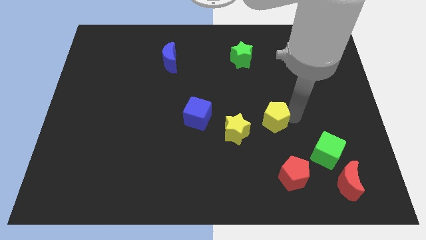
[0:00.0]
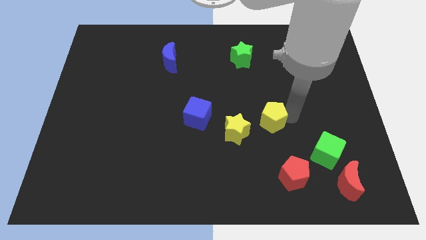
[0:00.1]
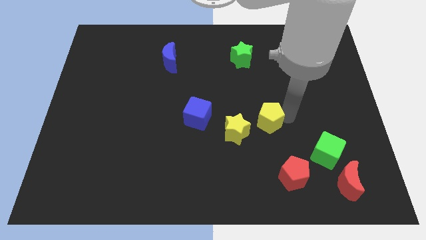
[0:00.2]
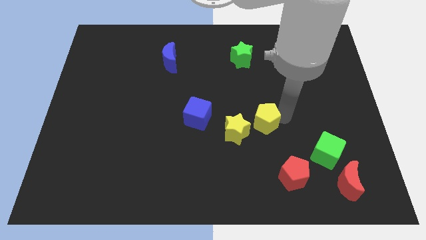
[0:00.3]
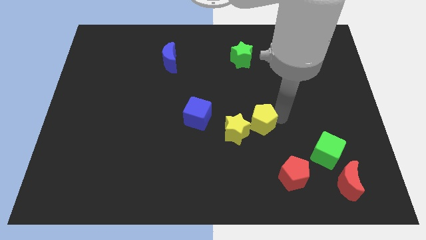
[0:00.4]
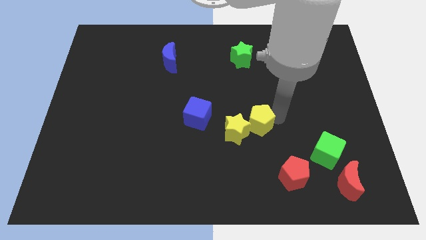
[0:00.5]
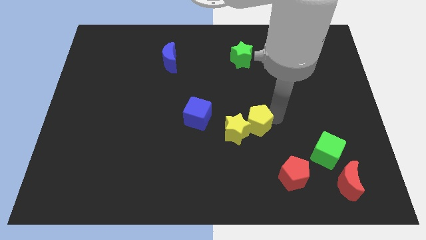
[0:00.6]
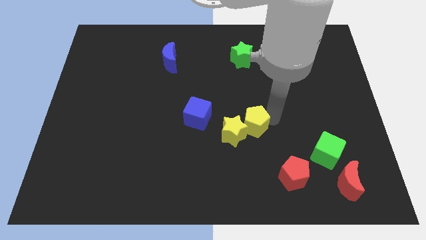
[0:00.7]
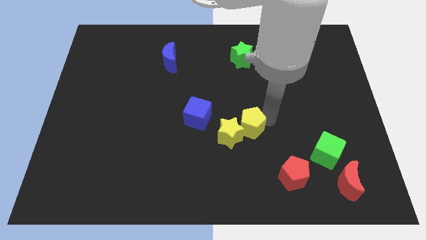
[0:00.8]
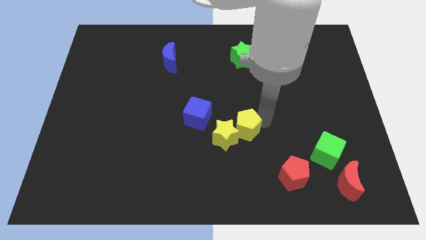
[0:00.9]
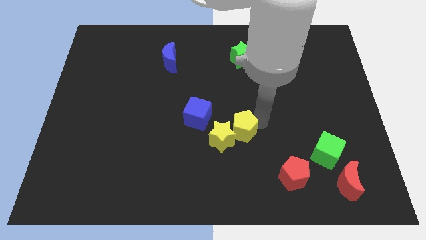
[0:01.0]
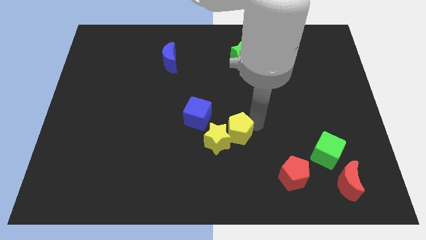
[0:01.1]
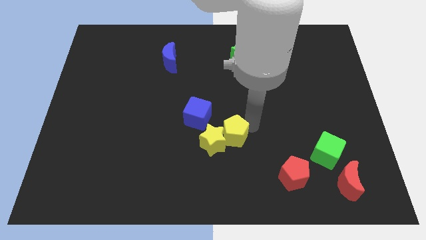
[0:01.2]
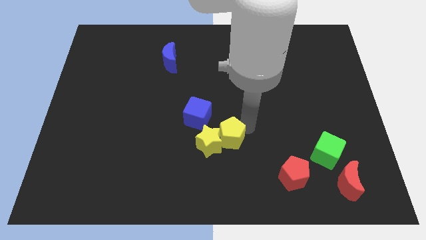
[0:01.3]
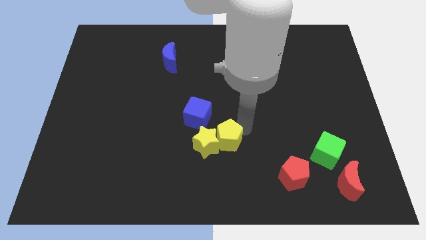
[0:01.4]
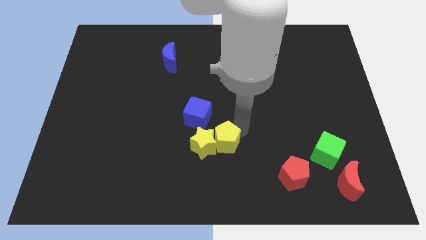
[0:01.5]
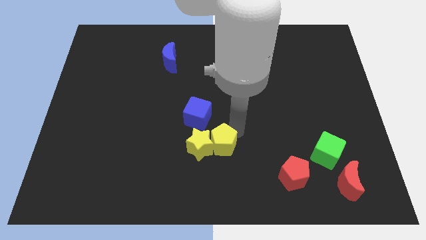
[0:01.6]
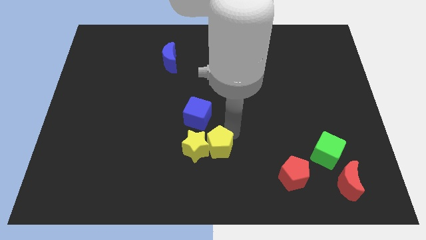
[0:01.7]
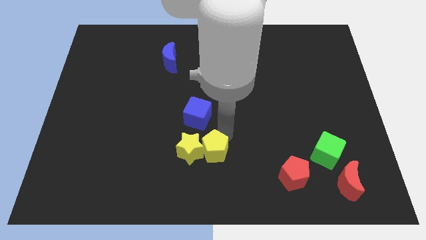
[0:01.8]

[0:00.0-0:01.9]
move the yellow pentagon and yellow star towards left

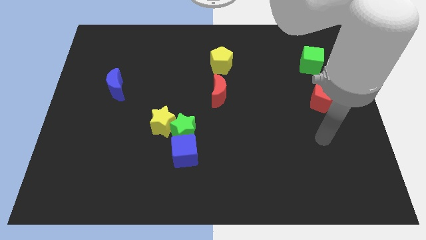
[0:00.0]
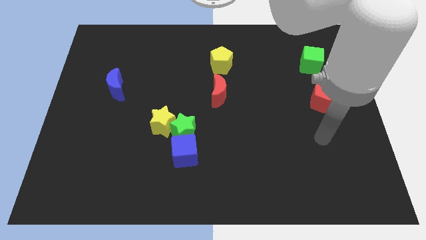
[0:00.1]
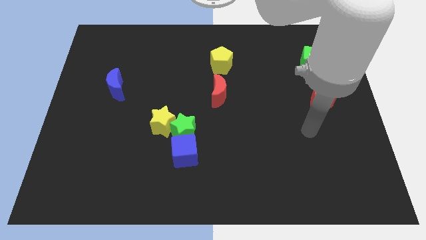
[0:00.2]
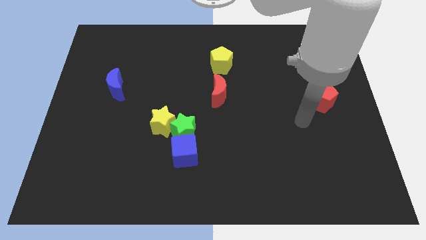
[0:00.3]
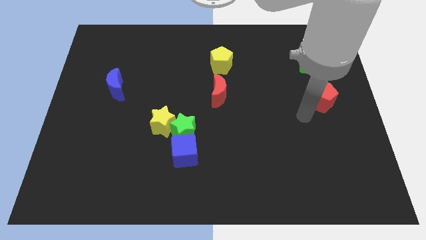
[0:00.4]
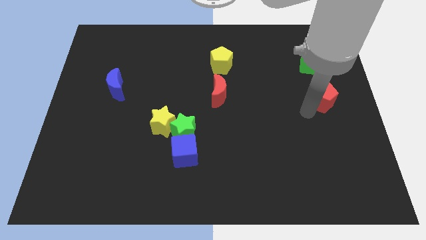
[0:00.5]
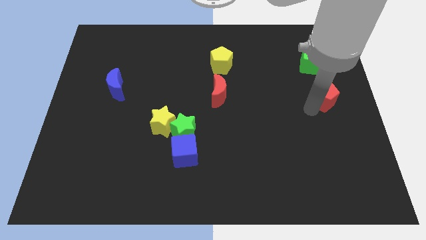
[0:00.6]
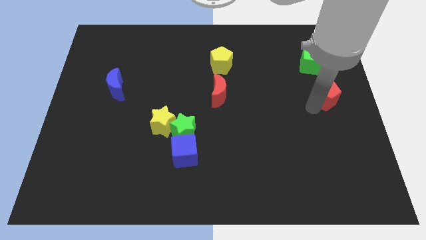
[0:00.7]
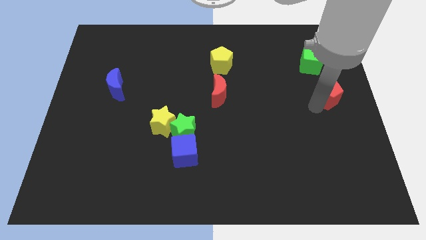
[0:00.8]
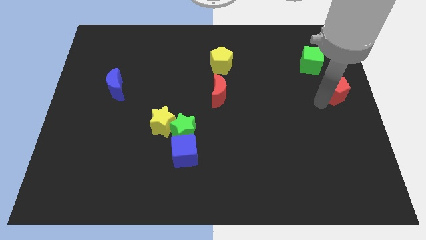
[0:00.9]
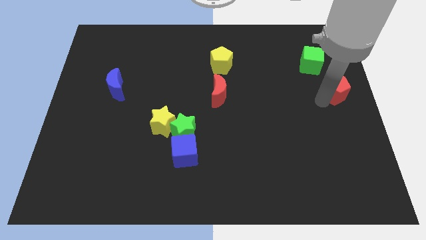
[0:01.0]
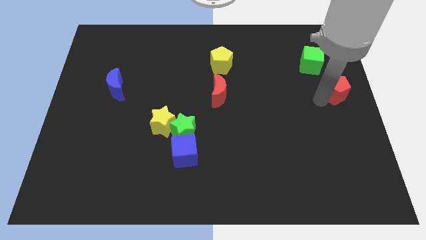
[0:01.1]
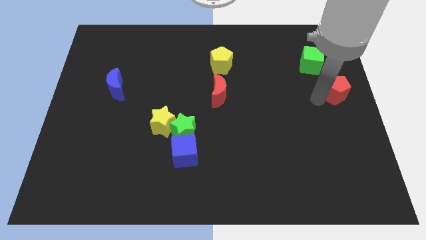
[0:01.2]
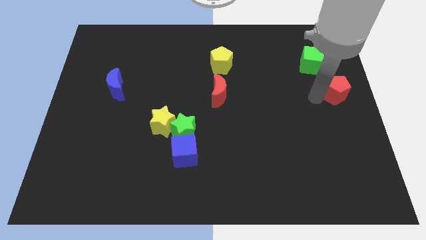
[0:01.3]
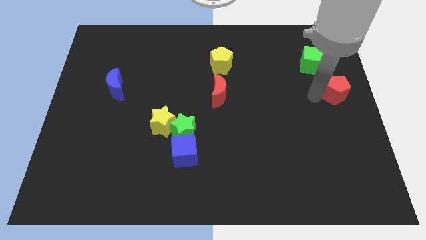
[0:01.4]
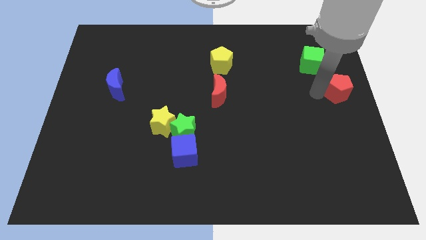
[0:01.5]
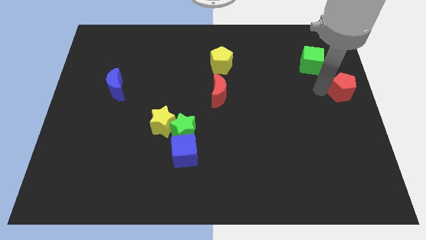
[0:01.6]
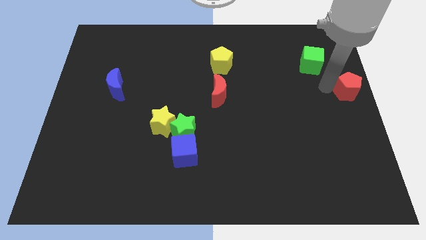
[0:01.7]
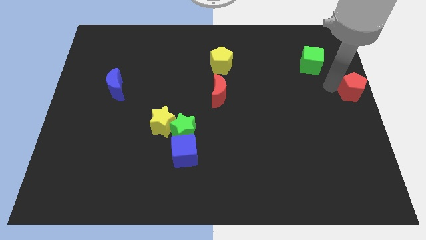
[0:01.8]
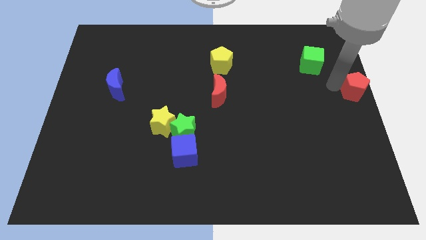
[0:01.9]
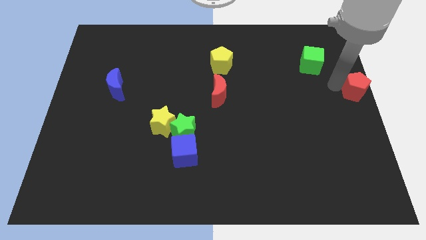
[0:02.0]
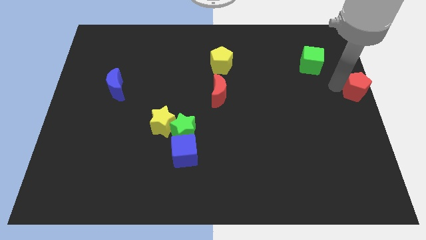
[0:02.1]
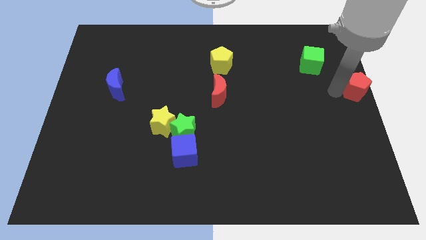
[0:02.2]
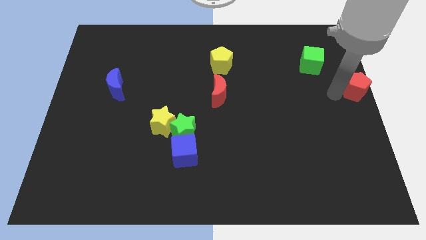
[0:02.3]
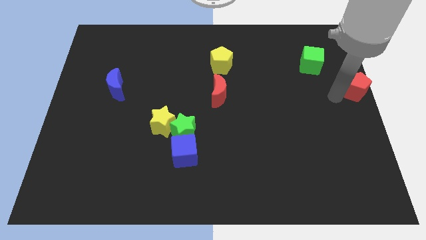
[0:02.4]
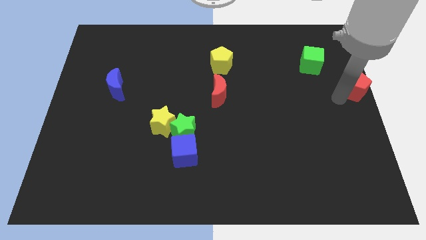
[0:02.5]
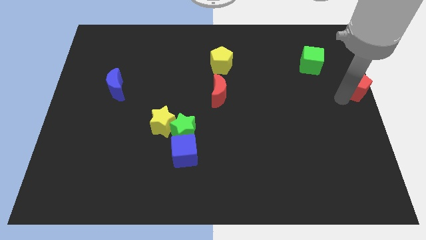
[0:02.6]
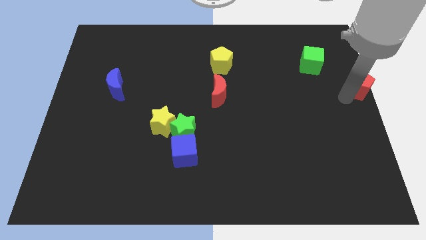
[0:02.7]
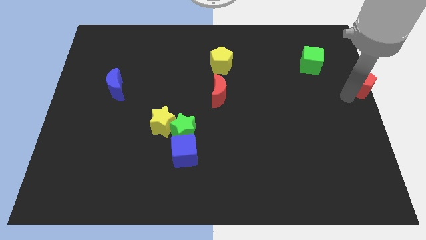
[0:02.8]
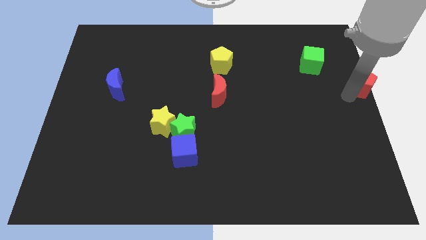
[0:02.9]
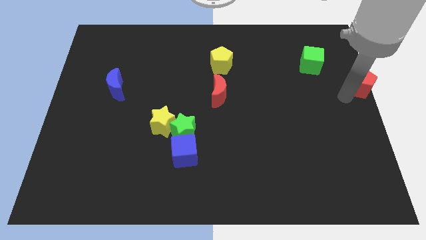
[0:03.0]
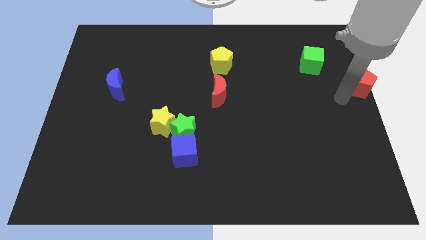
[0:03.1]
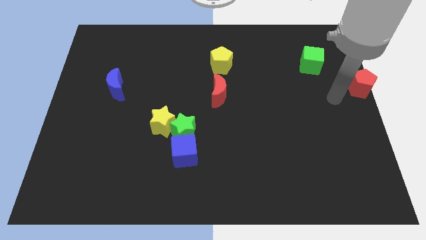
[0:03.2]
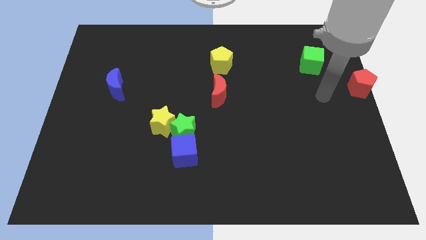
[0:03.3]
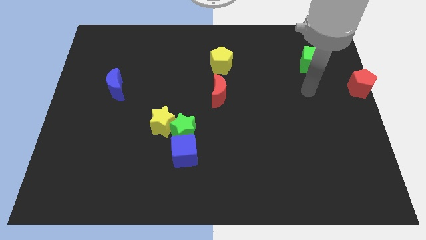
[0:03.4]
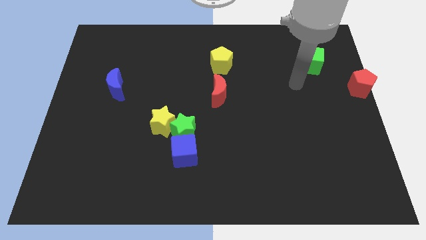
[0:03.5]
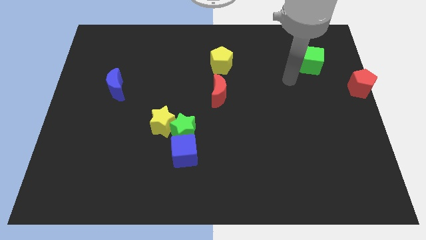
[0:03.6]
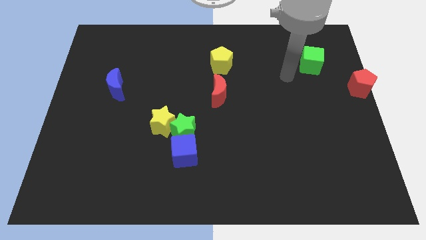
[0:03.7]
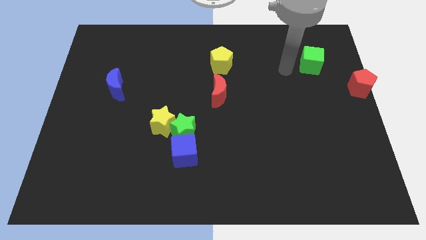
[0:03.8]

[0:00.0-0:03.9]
move the red pentagon to the left side of the board

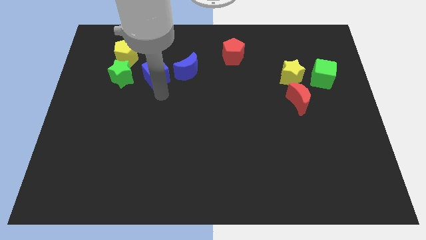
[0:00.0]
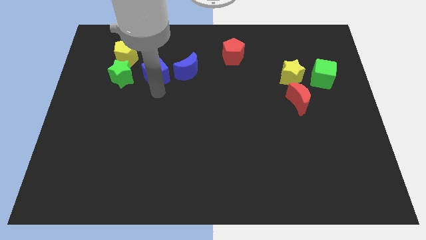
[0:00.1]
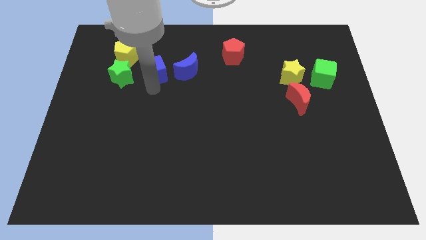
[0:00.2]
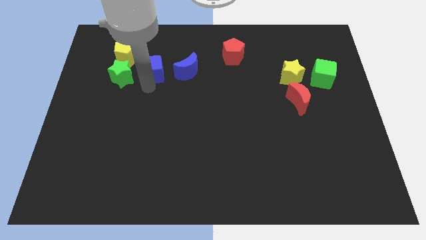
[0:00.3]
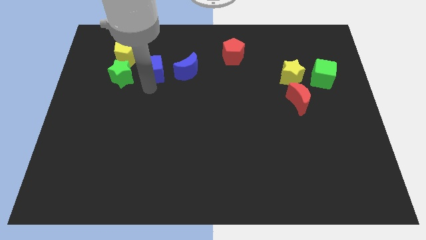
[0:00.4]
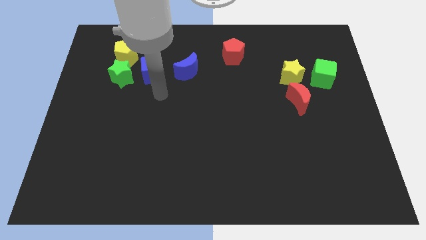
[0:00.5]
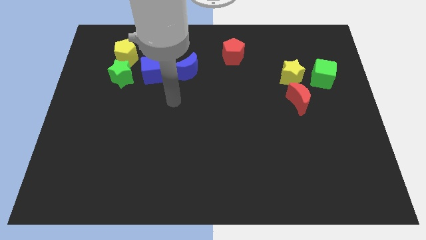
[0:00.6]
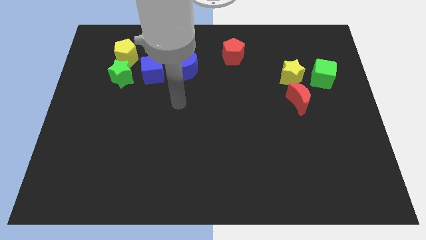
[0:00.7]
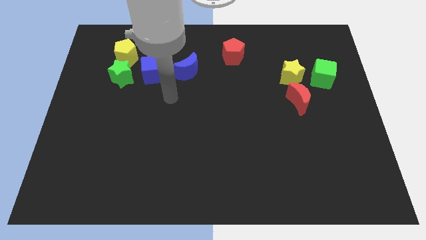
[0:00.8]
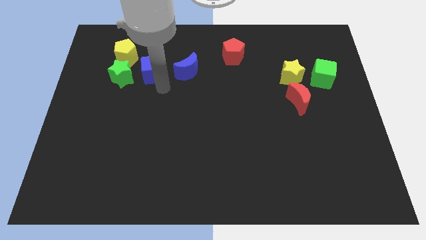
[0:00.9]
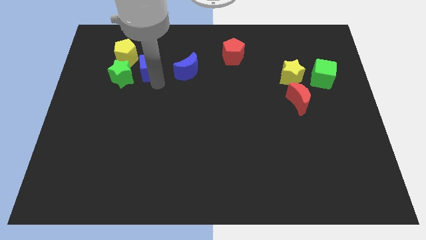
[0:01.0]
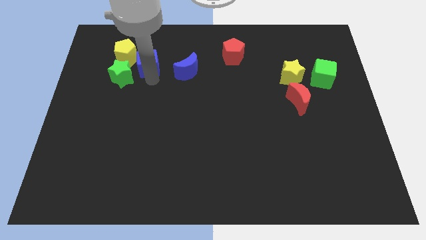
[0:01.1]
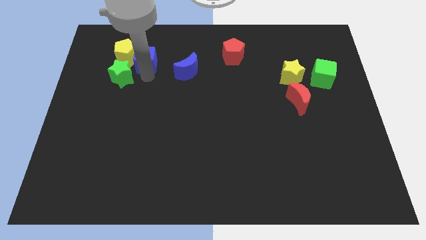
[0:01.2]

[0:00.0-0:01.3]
move the blue cube to the right of the yellow pentagon

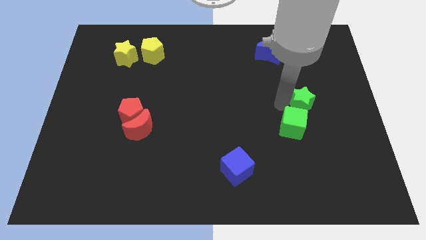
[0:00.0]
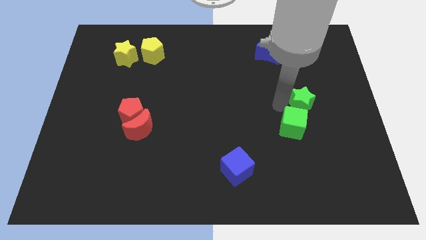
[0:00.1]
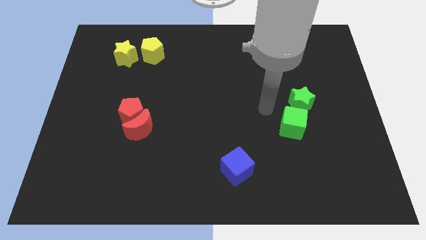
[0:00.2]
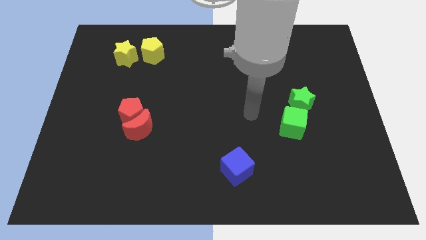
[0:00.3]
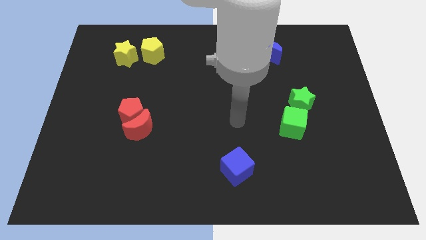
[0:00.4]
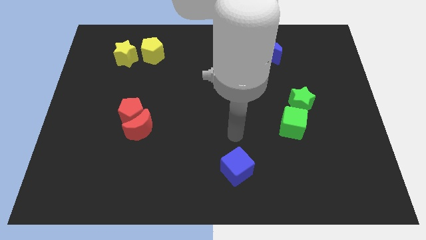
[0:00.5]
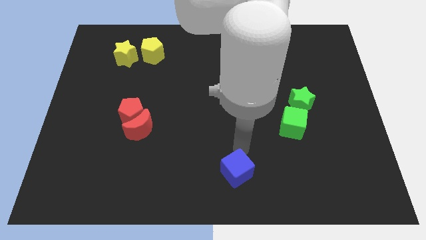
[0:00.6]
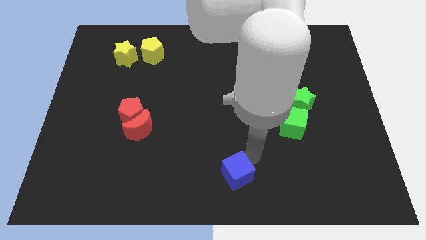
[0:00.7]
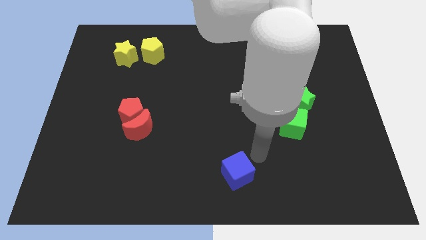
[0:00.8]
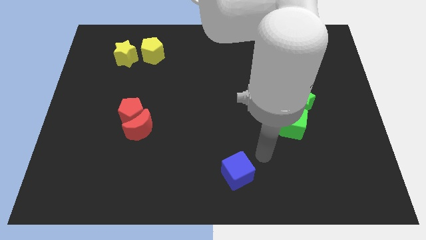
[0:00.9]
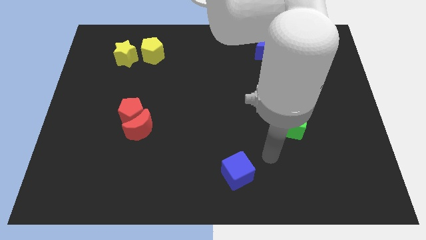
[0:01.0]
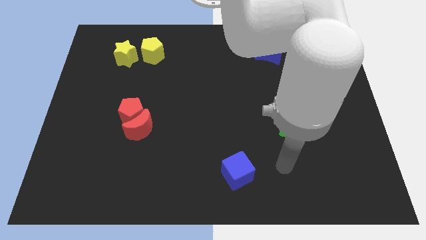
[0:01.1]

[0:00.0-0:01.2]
go and tap the blue cube

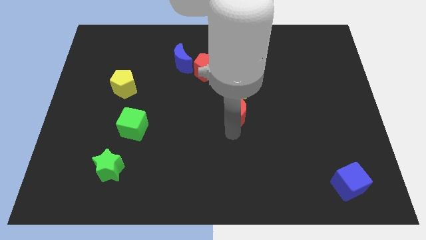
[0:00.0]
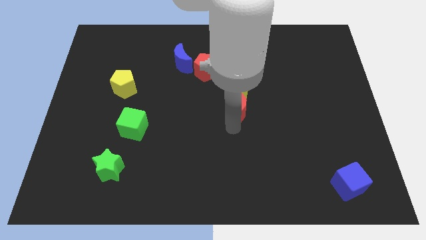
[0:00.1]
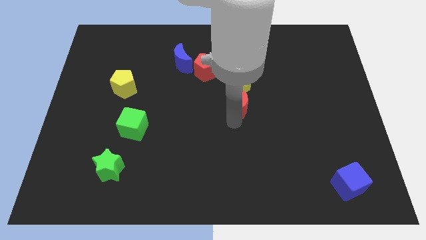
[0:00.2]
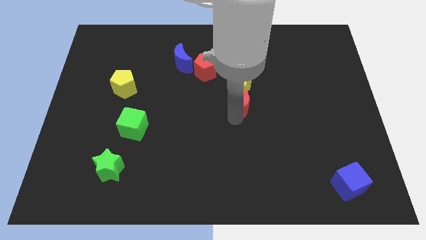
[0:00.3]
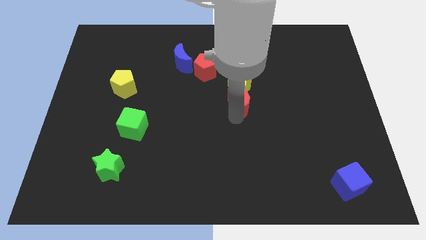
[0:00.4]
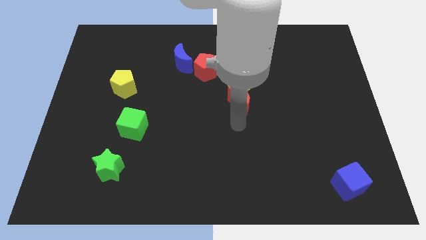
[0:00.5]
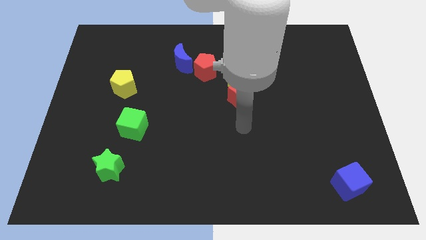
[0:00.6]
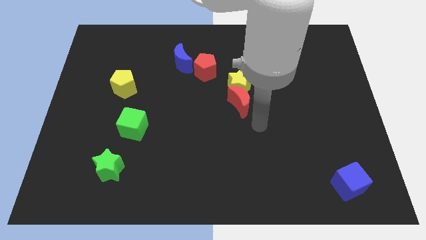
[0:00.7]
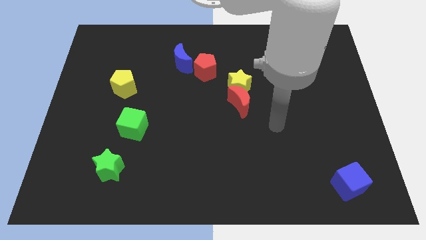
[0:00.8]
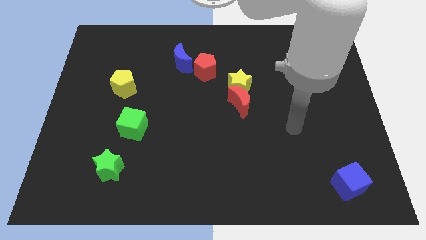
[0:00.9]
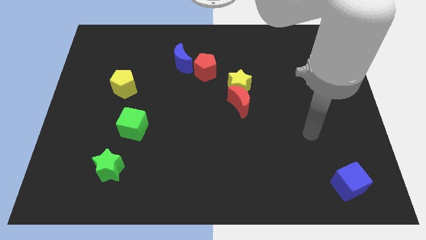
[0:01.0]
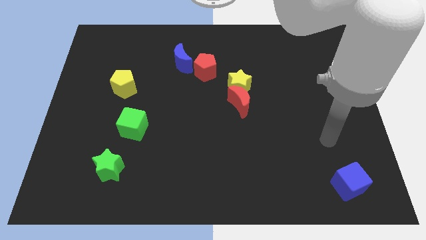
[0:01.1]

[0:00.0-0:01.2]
place the red crescent below the yellow star
